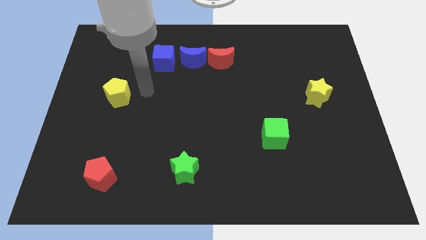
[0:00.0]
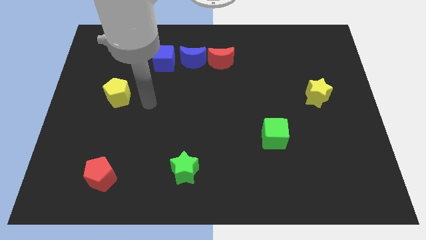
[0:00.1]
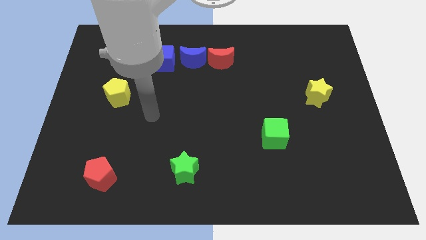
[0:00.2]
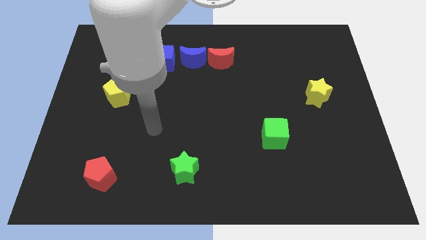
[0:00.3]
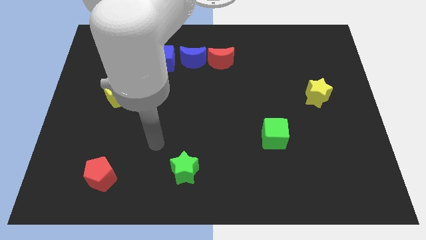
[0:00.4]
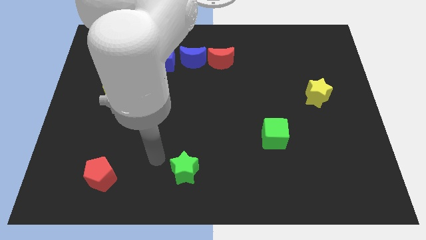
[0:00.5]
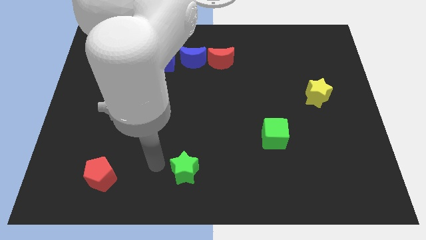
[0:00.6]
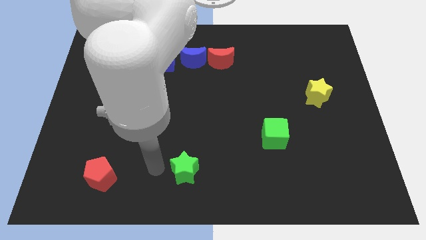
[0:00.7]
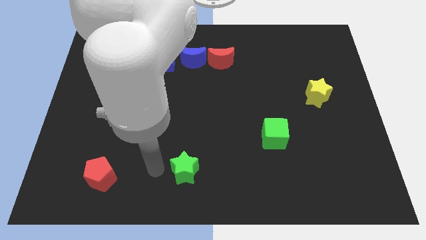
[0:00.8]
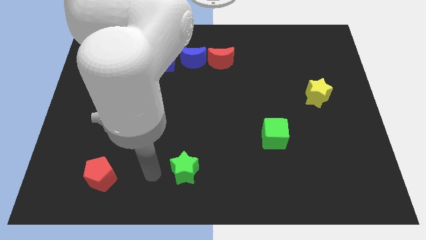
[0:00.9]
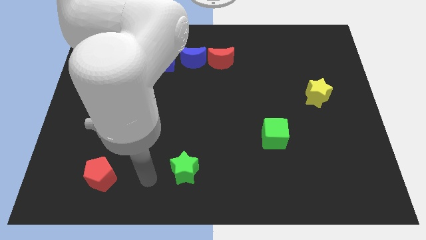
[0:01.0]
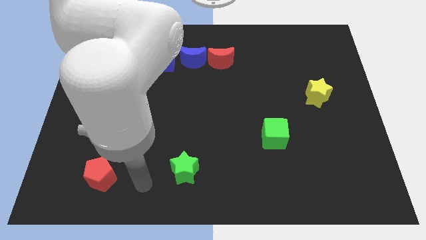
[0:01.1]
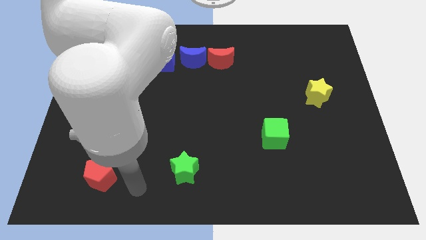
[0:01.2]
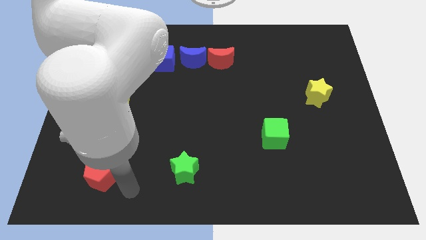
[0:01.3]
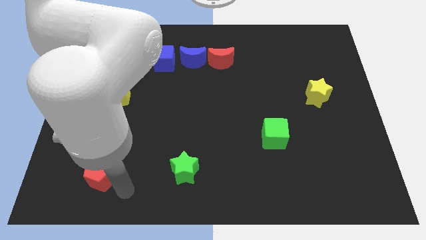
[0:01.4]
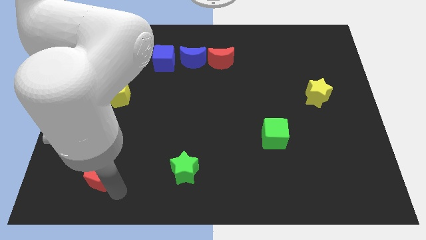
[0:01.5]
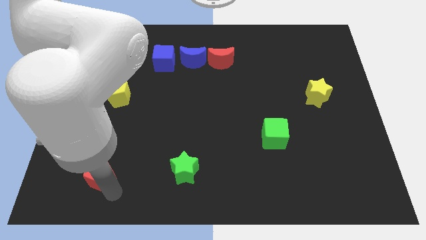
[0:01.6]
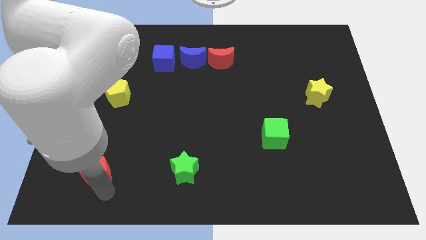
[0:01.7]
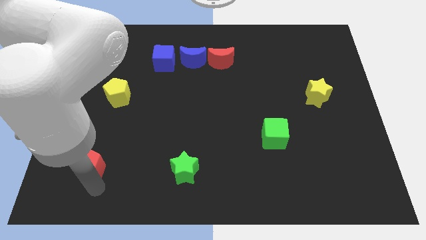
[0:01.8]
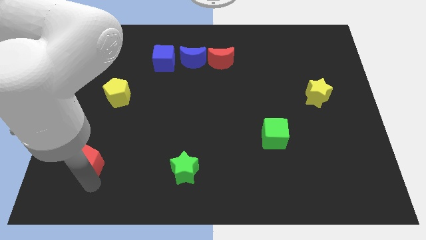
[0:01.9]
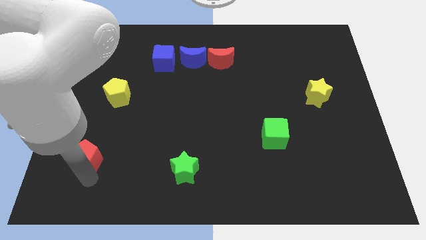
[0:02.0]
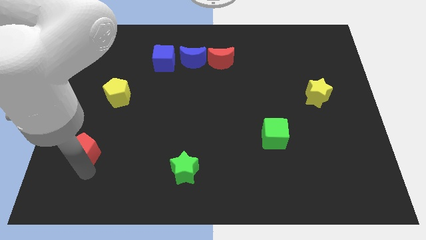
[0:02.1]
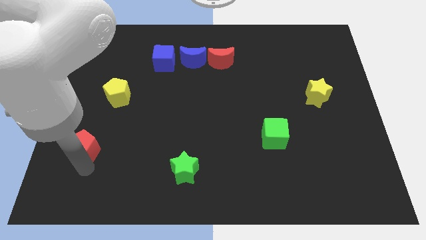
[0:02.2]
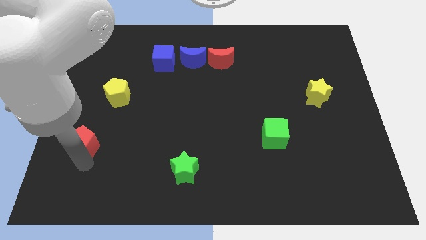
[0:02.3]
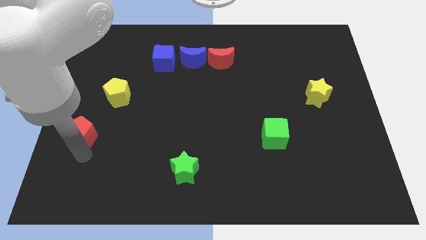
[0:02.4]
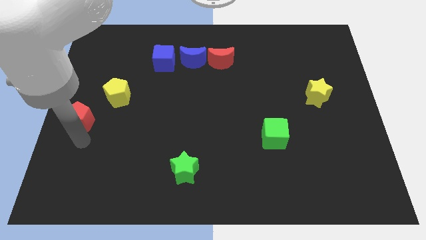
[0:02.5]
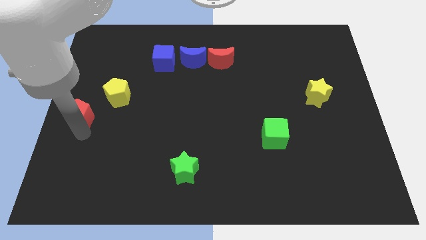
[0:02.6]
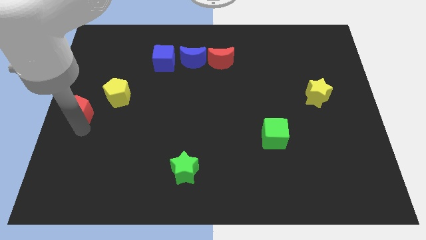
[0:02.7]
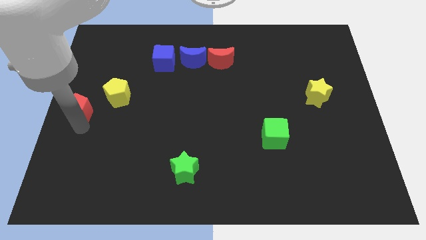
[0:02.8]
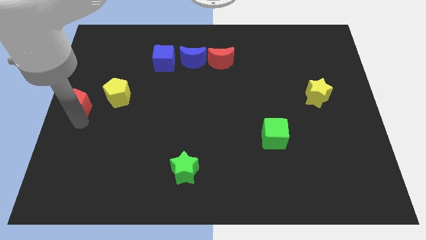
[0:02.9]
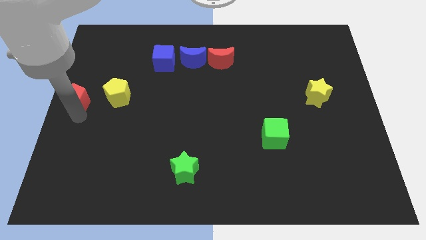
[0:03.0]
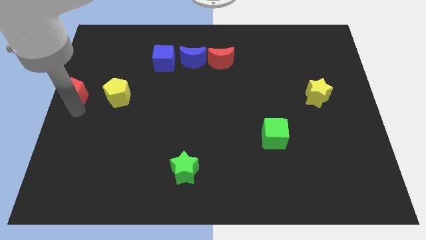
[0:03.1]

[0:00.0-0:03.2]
push the red pentagon beside the yellow pentagon

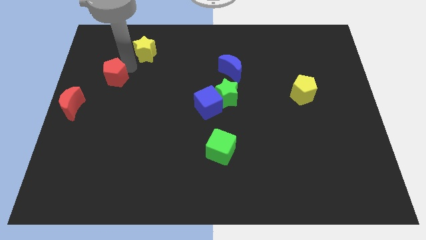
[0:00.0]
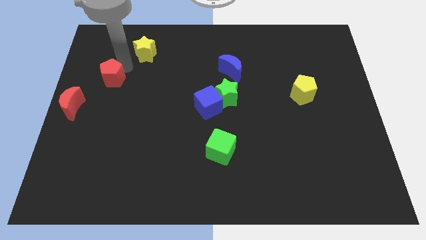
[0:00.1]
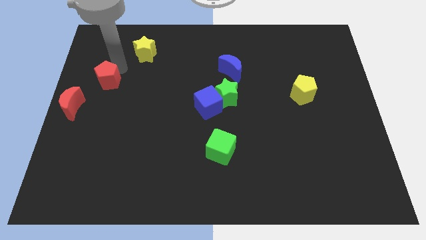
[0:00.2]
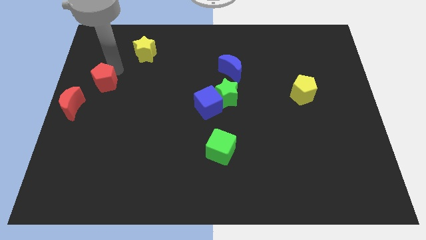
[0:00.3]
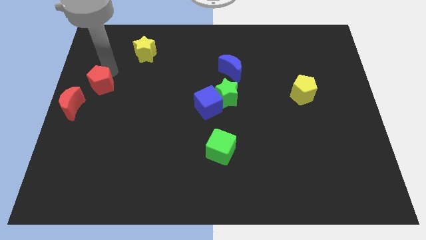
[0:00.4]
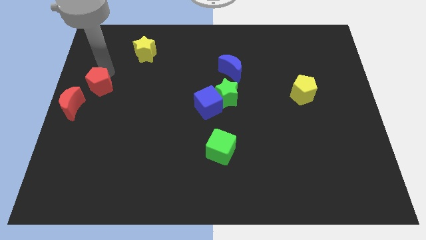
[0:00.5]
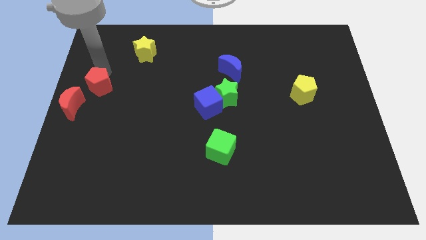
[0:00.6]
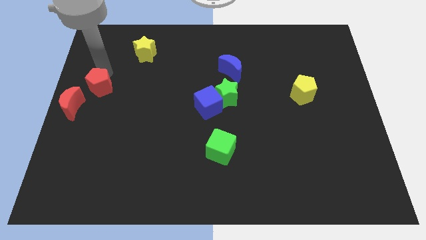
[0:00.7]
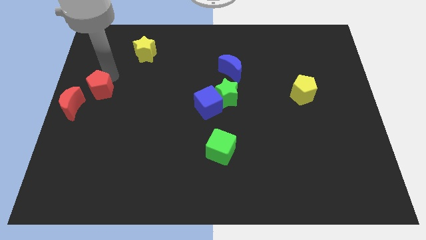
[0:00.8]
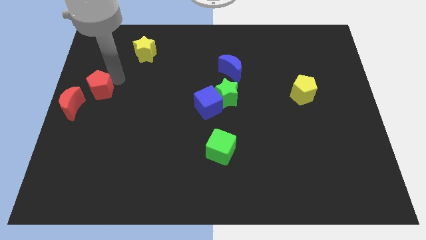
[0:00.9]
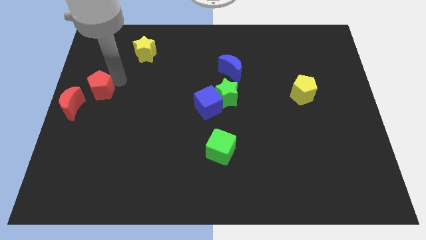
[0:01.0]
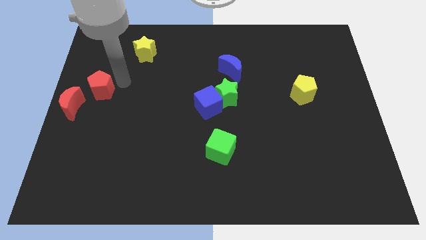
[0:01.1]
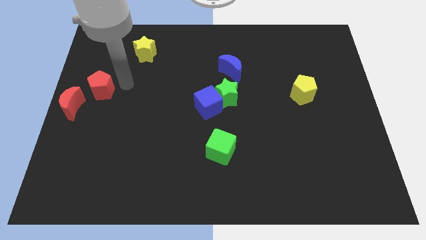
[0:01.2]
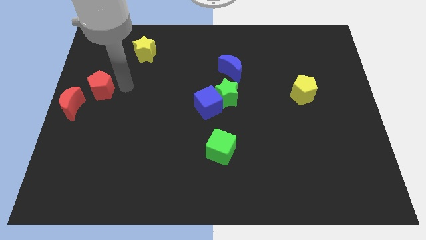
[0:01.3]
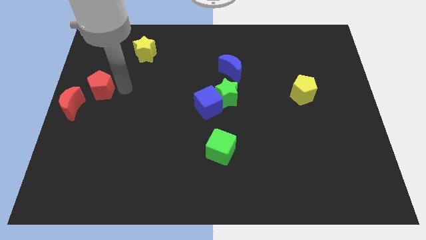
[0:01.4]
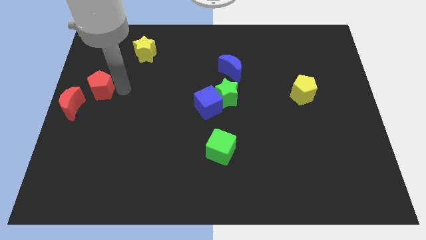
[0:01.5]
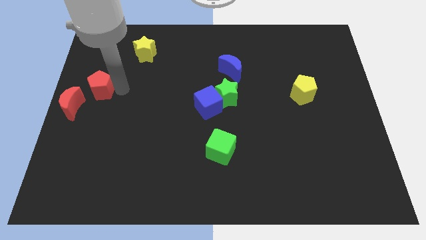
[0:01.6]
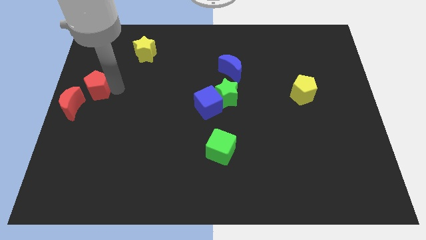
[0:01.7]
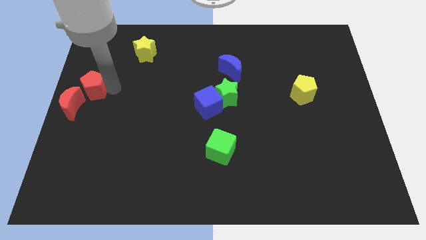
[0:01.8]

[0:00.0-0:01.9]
slide the red pentagon towards the center left

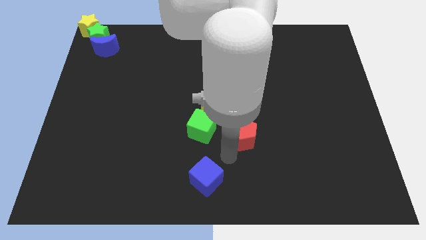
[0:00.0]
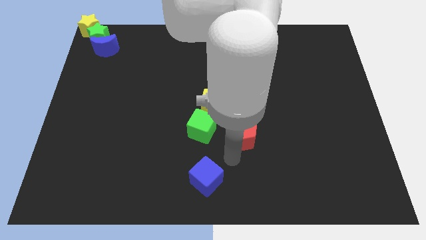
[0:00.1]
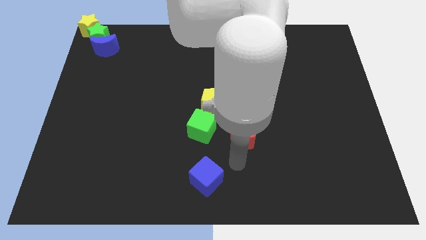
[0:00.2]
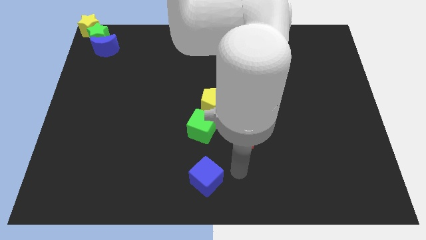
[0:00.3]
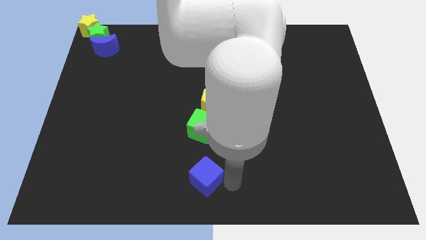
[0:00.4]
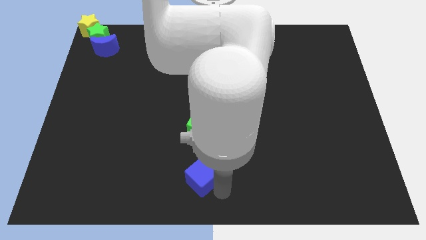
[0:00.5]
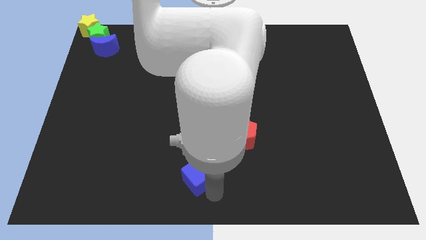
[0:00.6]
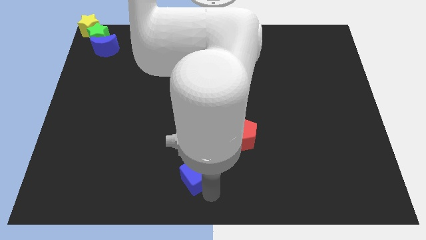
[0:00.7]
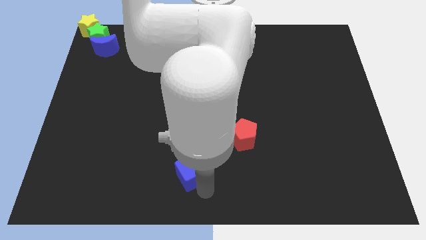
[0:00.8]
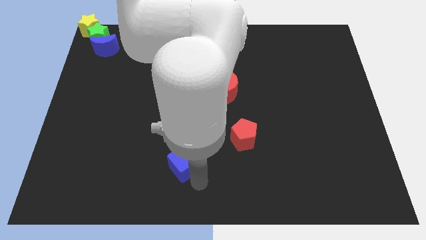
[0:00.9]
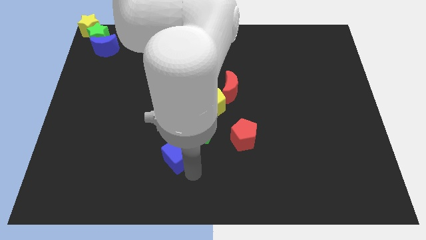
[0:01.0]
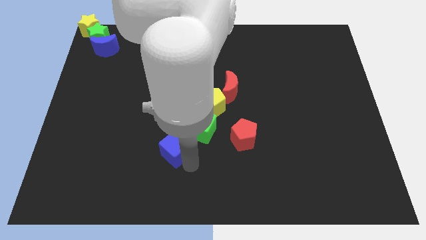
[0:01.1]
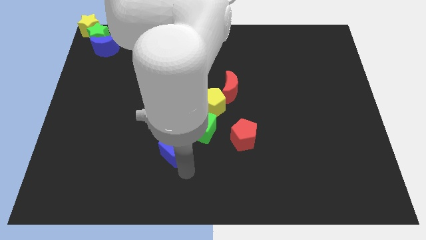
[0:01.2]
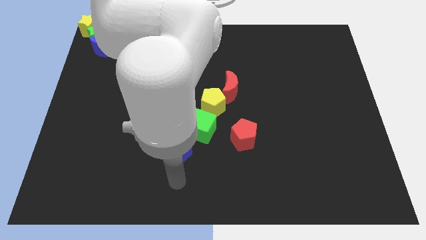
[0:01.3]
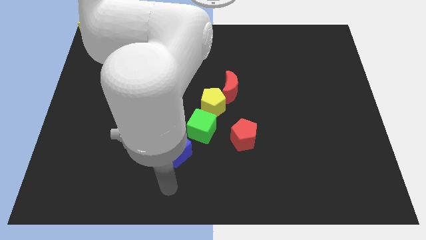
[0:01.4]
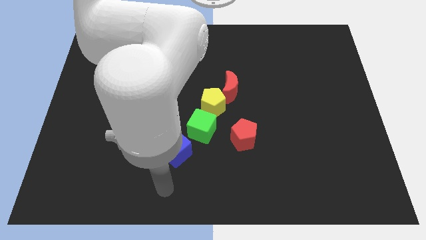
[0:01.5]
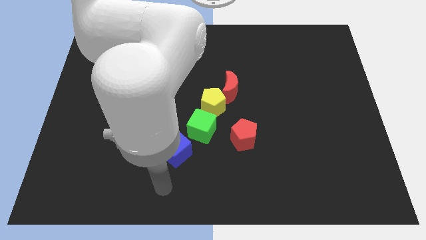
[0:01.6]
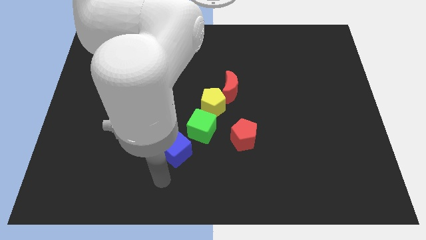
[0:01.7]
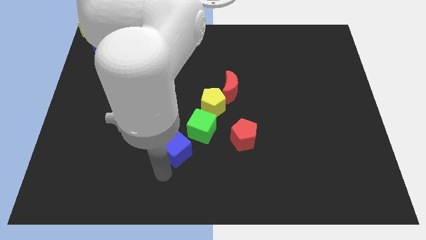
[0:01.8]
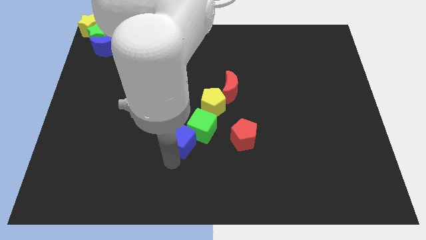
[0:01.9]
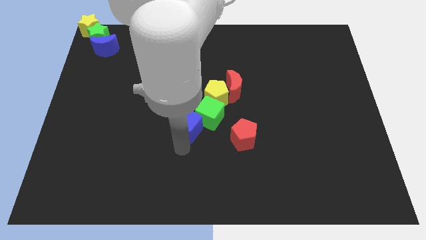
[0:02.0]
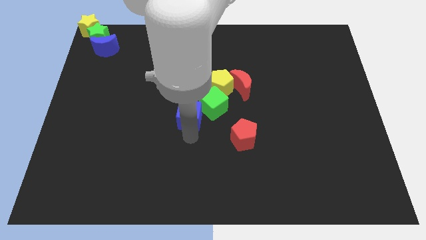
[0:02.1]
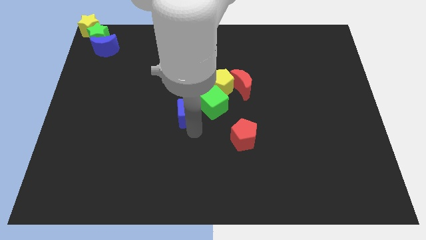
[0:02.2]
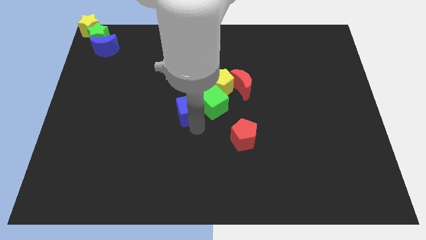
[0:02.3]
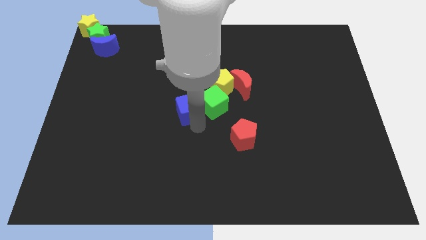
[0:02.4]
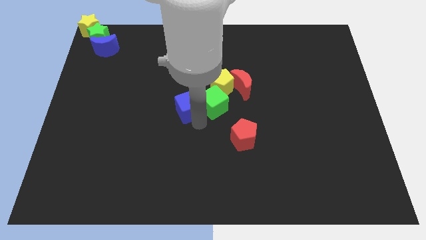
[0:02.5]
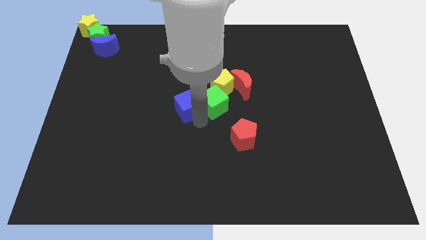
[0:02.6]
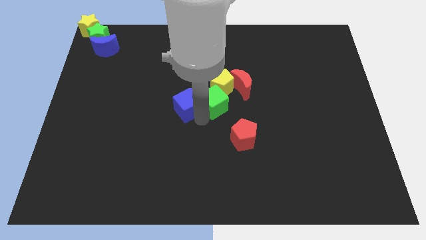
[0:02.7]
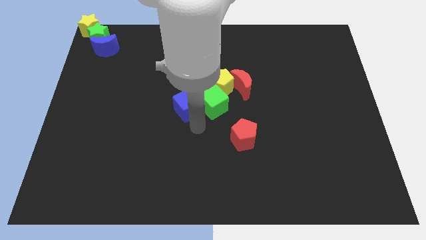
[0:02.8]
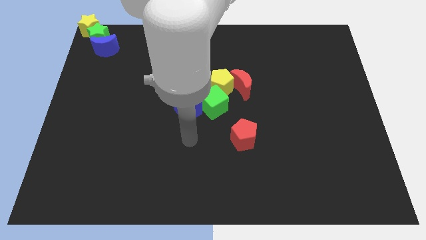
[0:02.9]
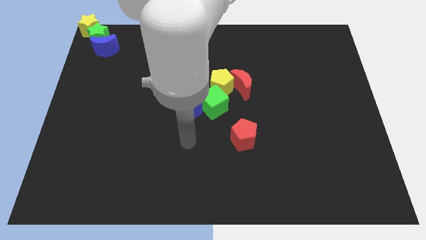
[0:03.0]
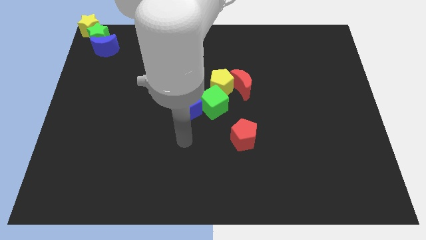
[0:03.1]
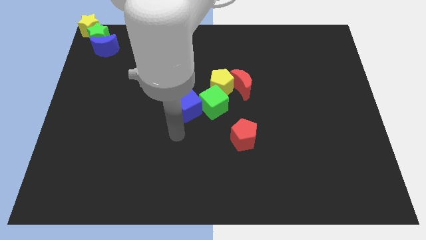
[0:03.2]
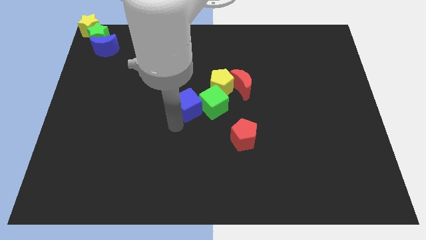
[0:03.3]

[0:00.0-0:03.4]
push the blue cube to the left side of the green cube

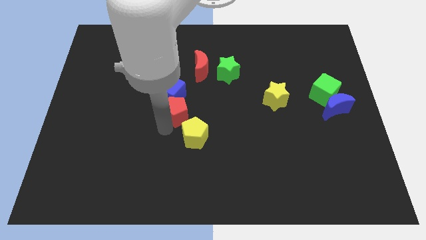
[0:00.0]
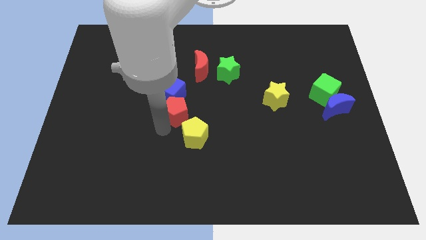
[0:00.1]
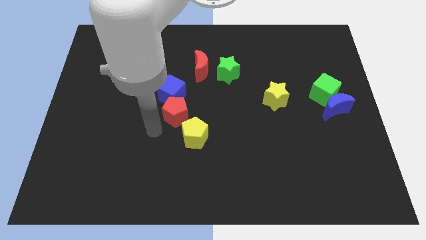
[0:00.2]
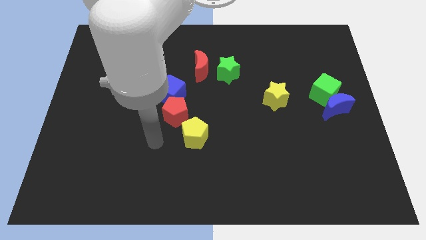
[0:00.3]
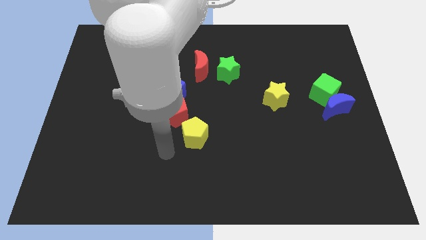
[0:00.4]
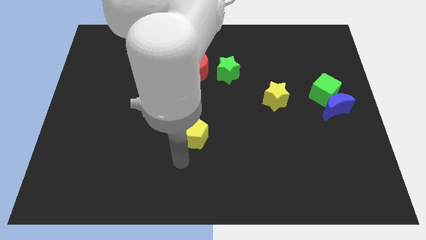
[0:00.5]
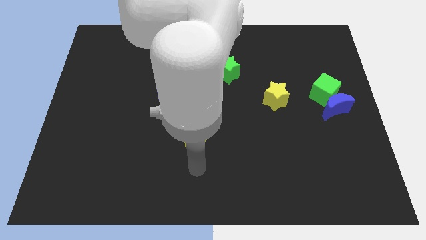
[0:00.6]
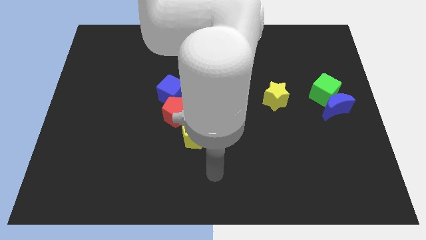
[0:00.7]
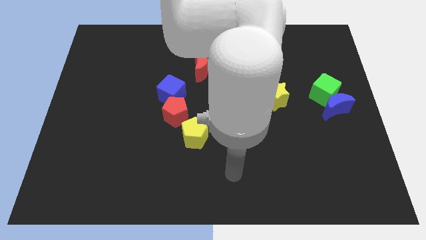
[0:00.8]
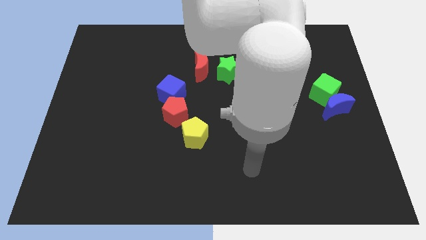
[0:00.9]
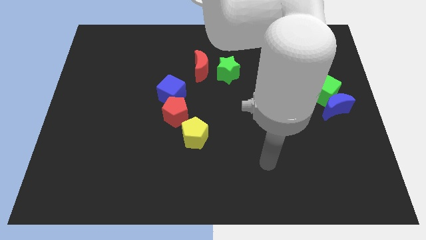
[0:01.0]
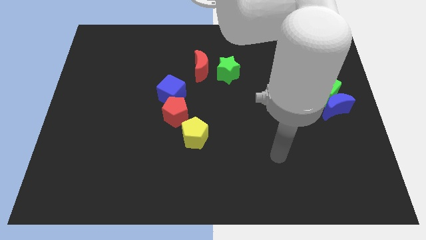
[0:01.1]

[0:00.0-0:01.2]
move yourself away from the red pentagon
